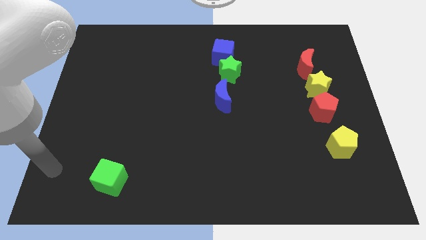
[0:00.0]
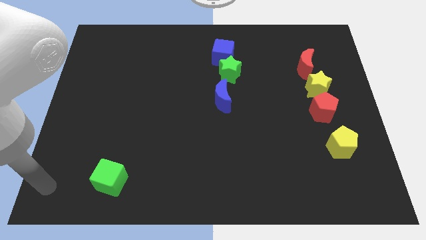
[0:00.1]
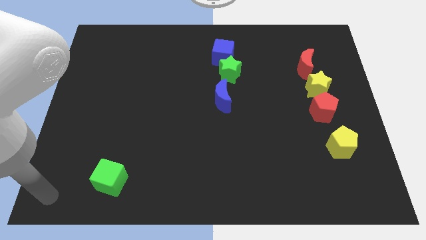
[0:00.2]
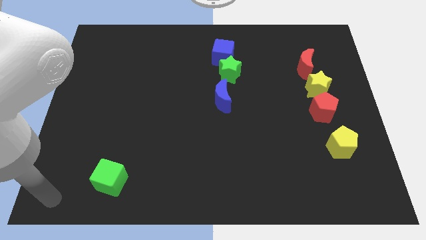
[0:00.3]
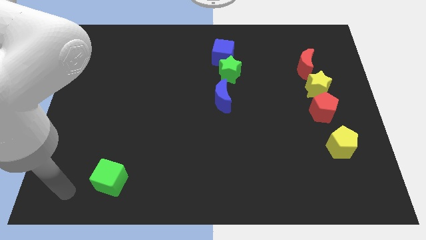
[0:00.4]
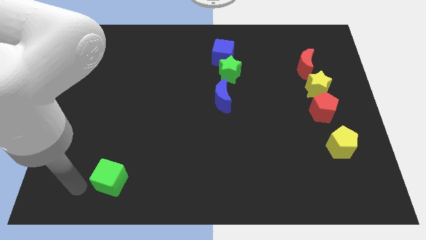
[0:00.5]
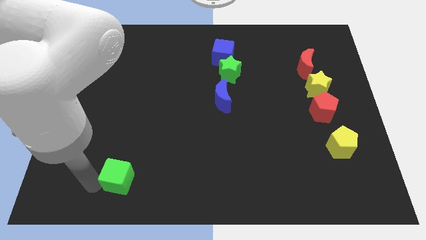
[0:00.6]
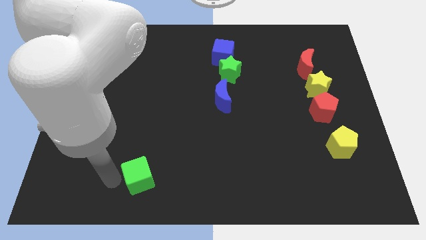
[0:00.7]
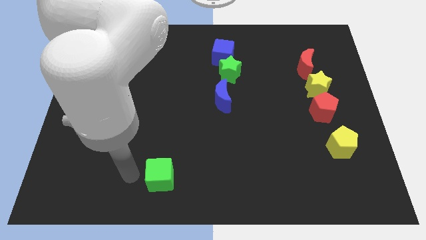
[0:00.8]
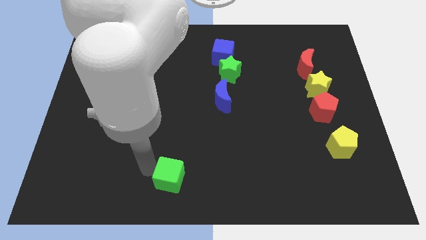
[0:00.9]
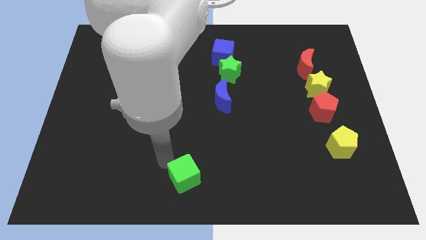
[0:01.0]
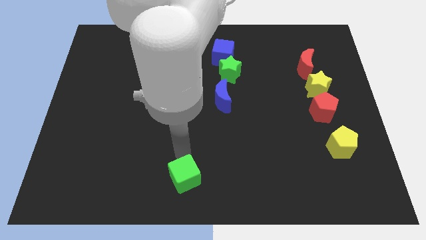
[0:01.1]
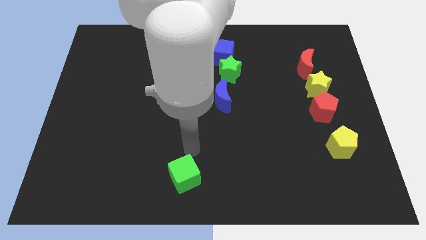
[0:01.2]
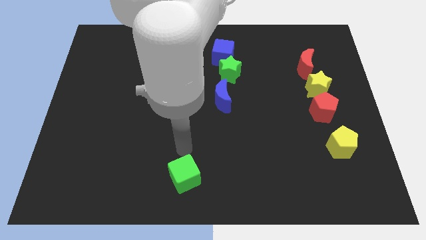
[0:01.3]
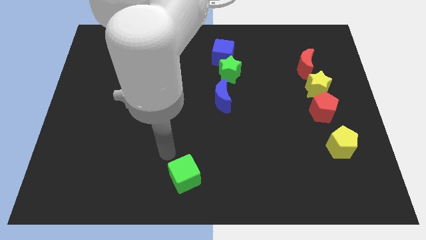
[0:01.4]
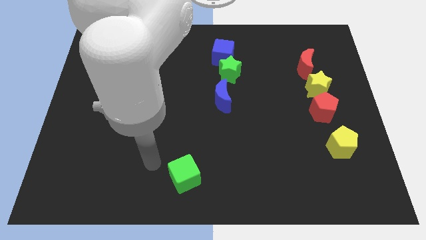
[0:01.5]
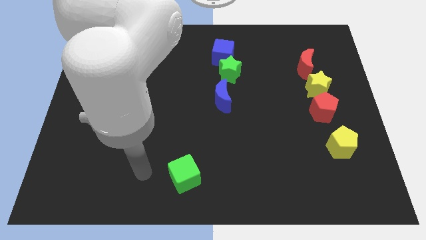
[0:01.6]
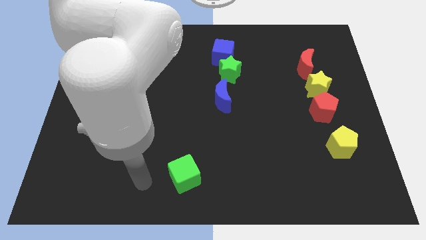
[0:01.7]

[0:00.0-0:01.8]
push the green cube near to the bottom center

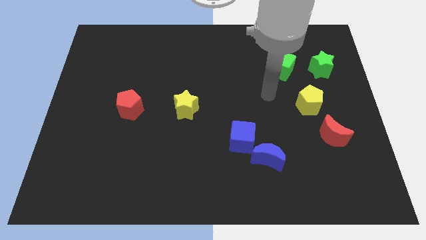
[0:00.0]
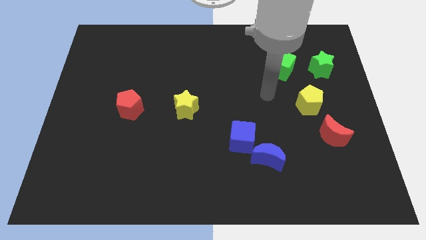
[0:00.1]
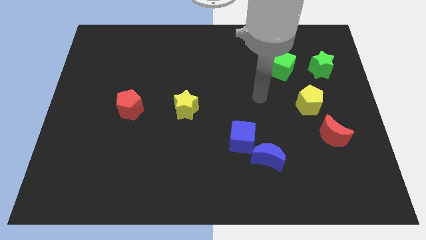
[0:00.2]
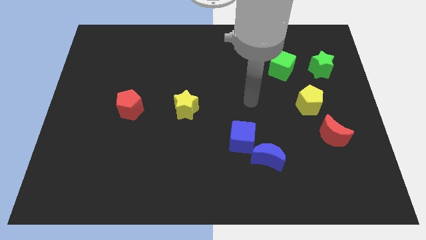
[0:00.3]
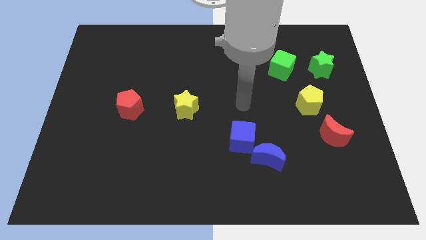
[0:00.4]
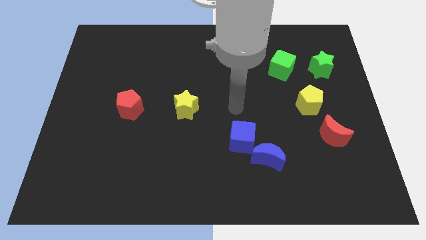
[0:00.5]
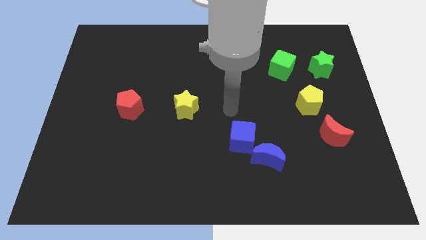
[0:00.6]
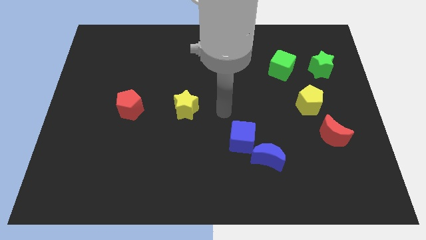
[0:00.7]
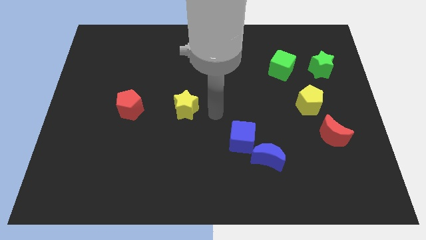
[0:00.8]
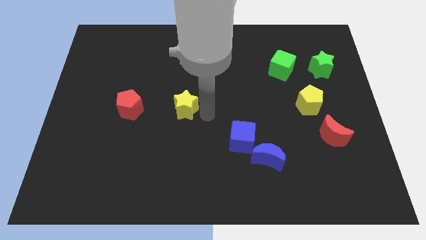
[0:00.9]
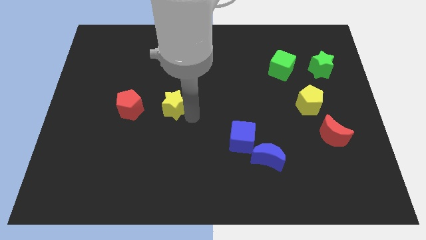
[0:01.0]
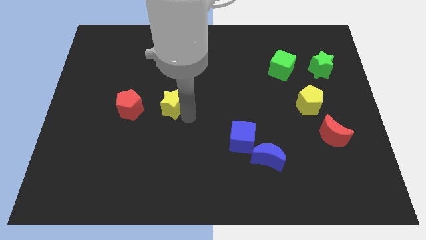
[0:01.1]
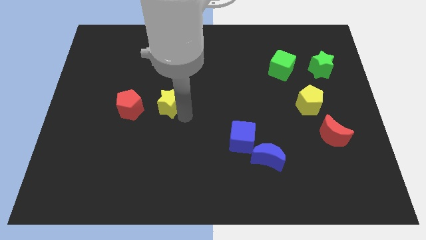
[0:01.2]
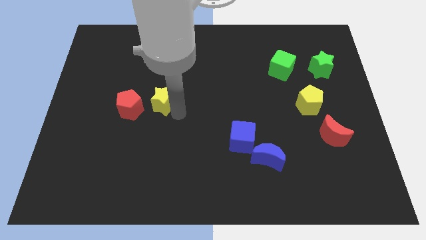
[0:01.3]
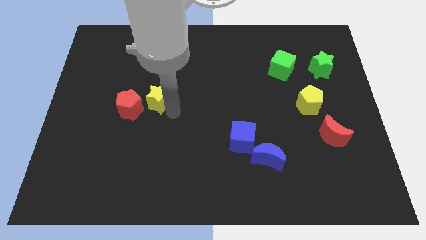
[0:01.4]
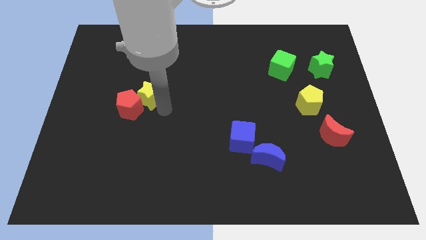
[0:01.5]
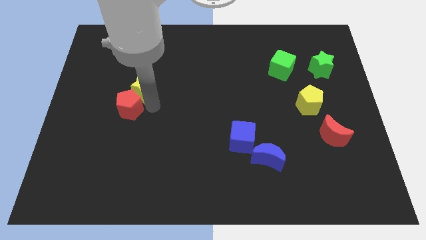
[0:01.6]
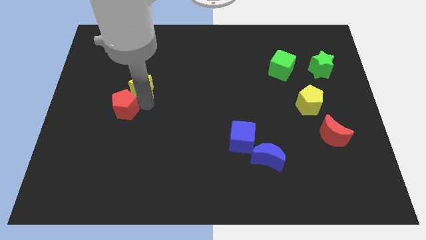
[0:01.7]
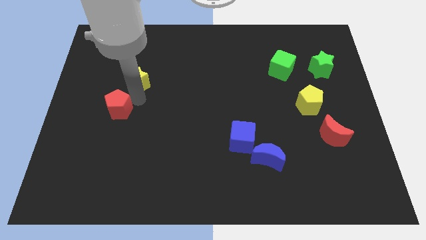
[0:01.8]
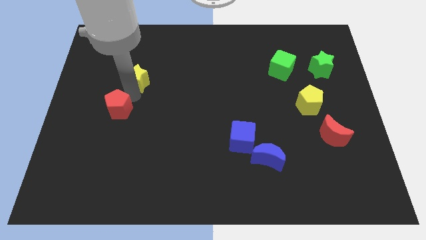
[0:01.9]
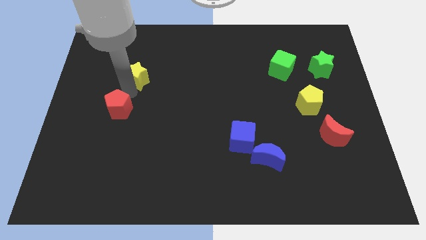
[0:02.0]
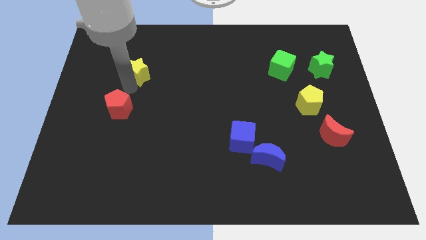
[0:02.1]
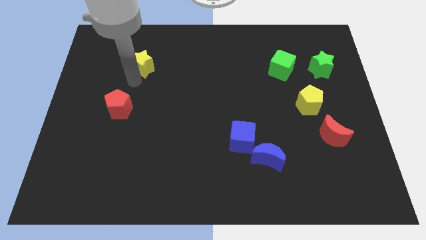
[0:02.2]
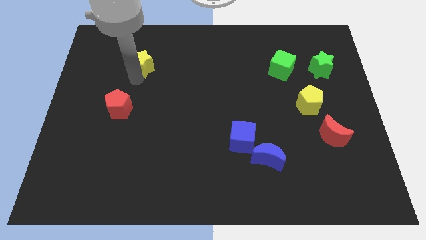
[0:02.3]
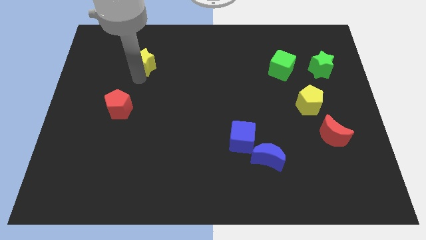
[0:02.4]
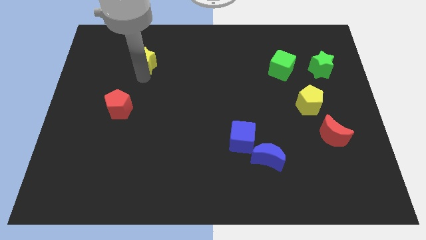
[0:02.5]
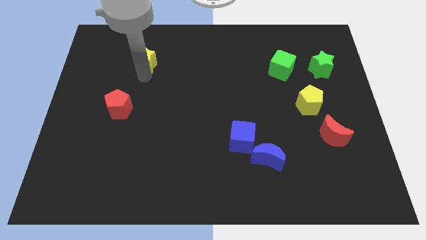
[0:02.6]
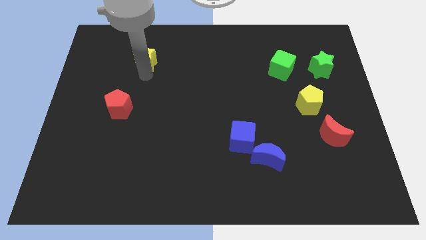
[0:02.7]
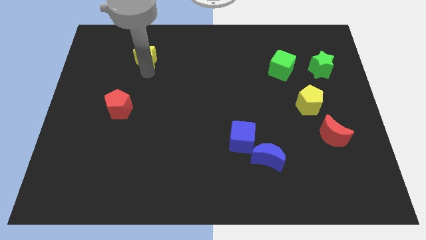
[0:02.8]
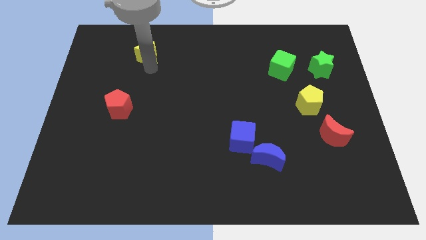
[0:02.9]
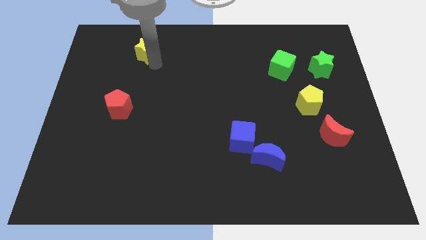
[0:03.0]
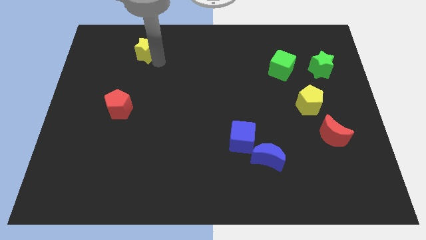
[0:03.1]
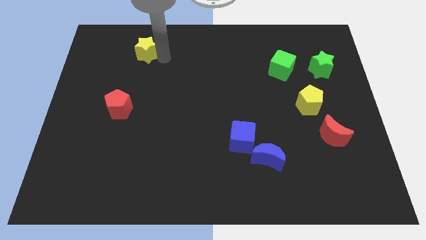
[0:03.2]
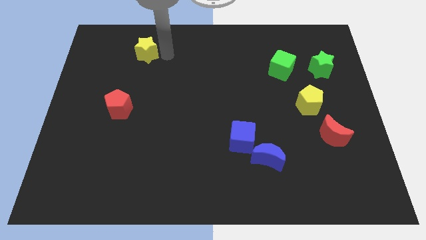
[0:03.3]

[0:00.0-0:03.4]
push the red pentagon with the yellow star

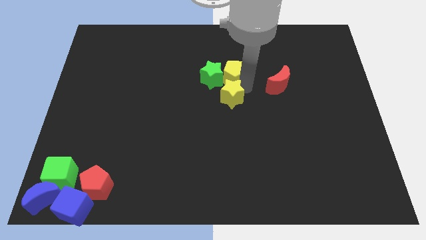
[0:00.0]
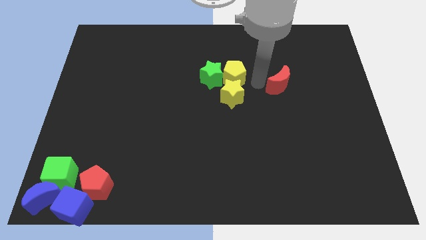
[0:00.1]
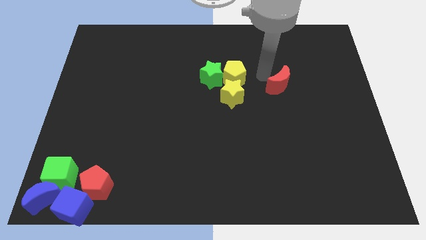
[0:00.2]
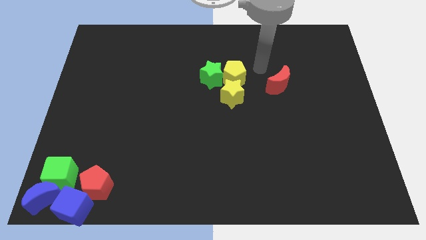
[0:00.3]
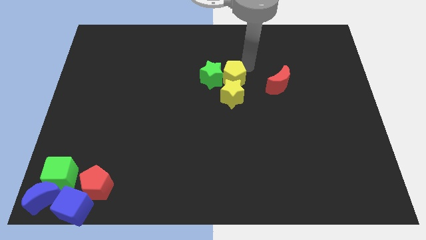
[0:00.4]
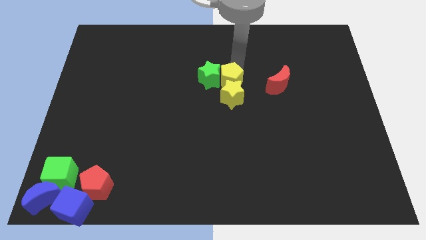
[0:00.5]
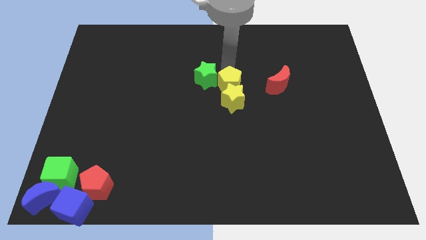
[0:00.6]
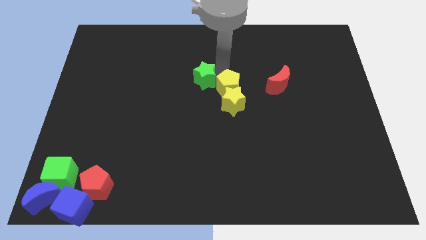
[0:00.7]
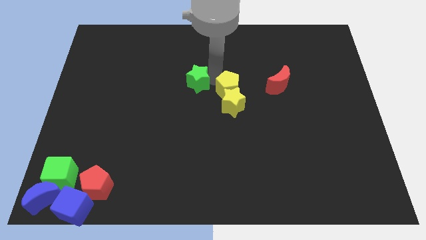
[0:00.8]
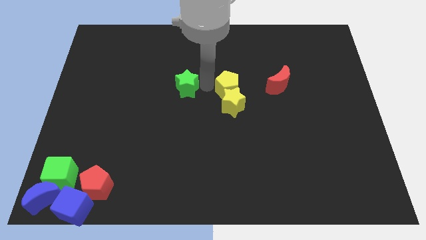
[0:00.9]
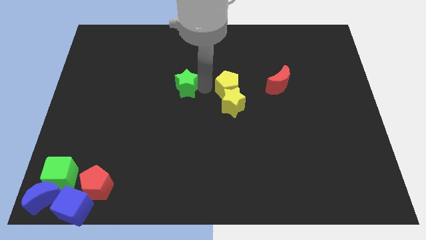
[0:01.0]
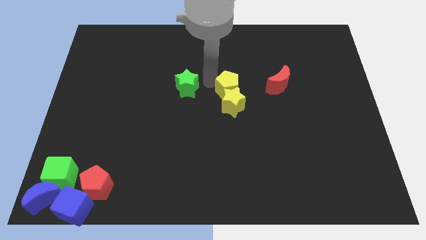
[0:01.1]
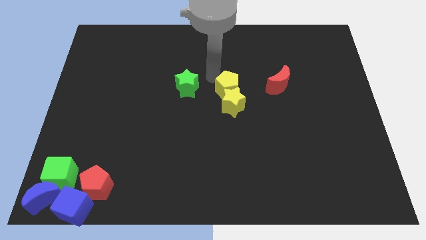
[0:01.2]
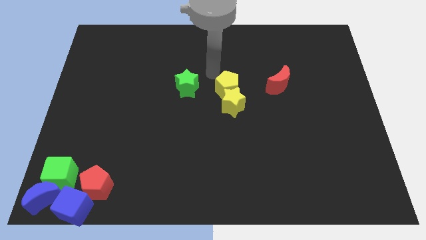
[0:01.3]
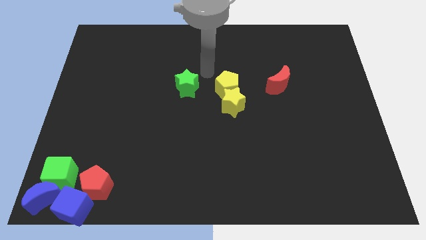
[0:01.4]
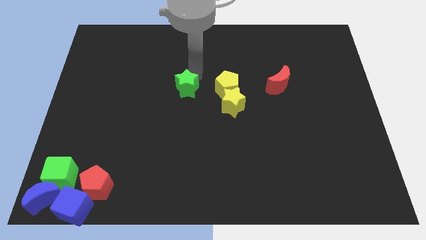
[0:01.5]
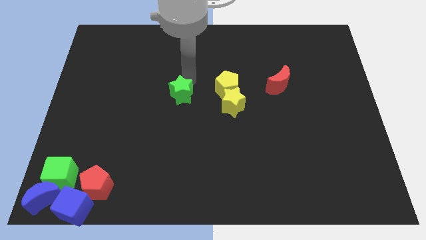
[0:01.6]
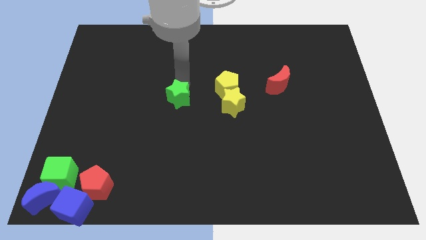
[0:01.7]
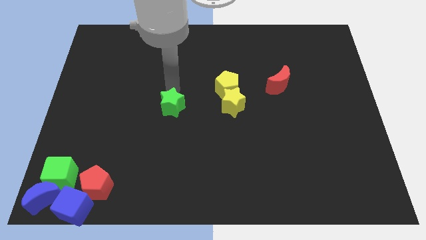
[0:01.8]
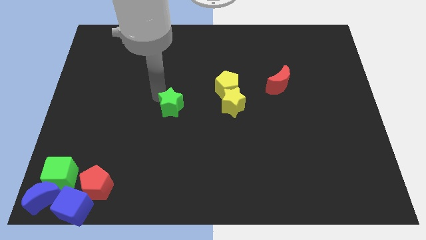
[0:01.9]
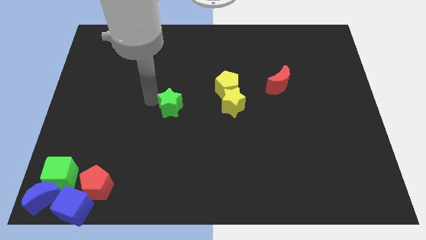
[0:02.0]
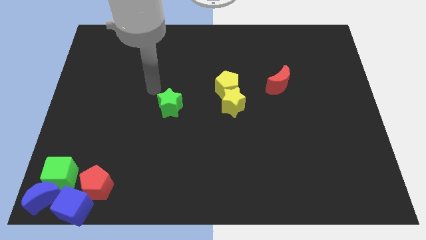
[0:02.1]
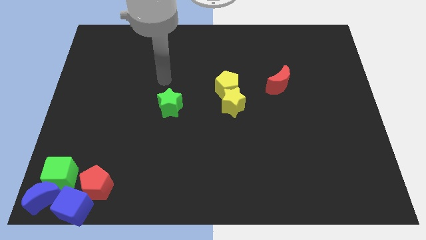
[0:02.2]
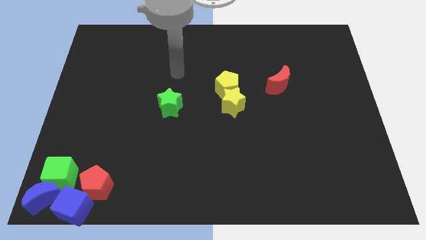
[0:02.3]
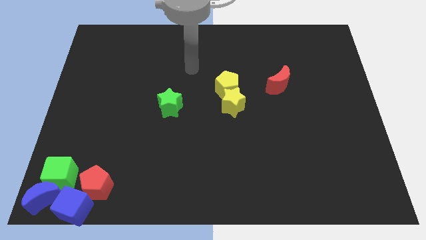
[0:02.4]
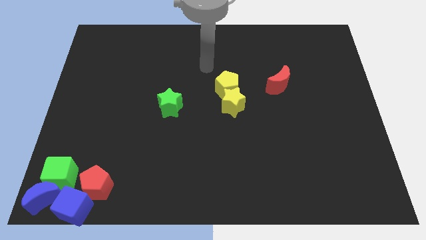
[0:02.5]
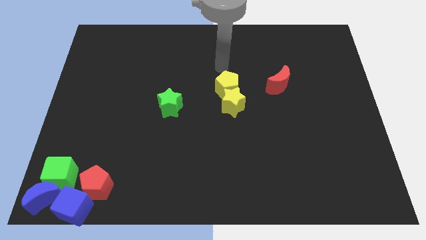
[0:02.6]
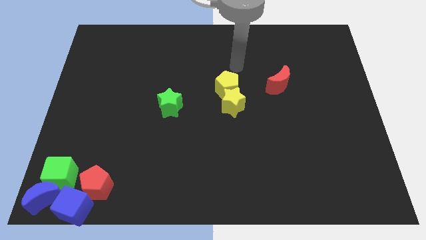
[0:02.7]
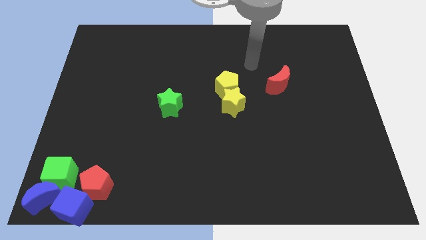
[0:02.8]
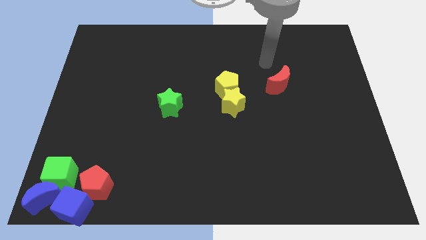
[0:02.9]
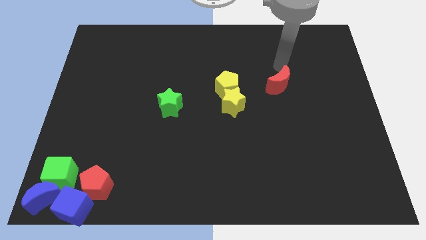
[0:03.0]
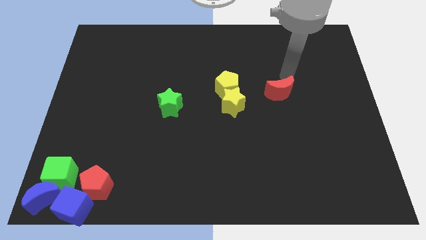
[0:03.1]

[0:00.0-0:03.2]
separate the green star from the yellow pentagon

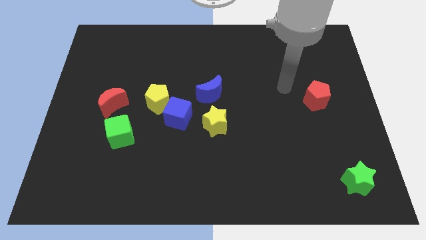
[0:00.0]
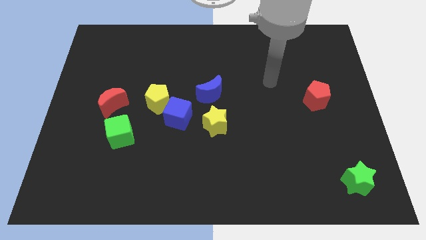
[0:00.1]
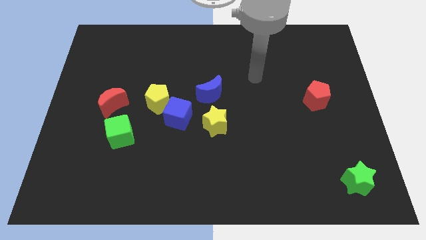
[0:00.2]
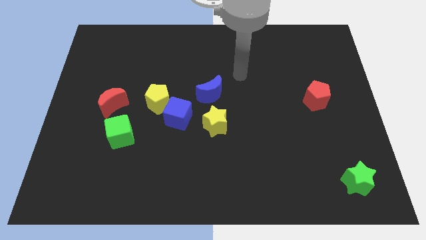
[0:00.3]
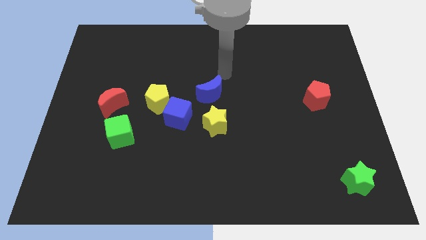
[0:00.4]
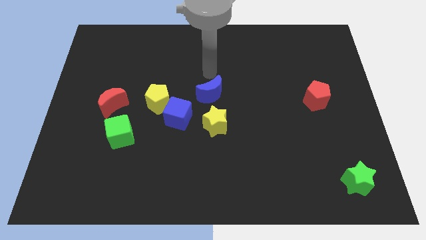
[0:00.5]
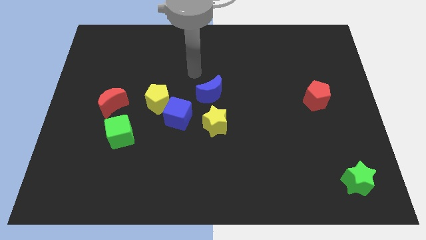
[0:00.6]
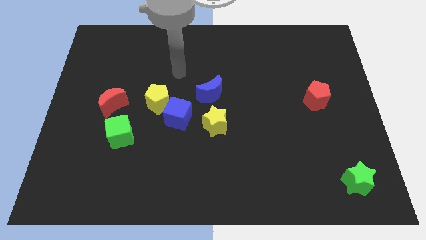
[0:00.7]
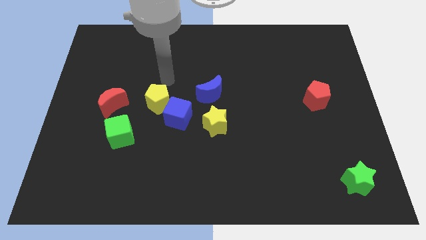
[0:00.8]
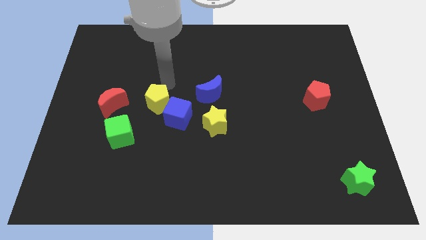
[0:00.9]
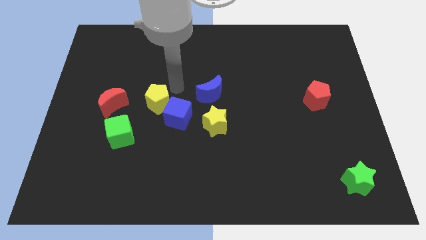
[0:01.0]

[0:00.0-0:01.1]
move your arm to the left of the blue crescent
